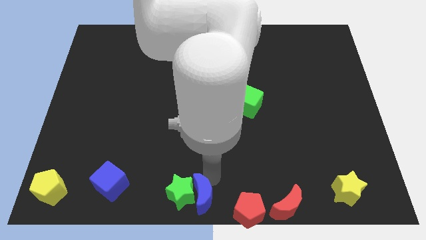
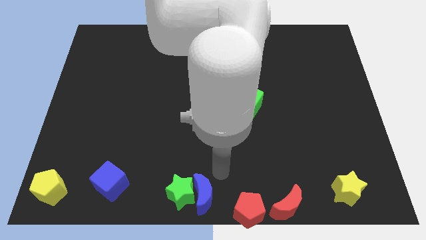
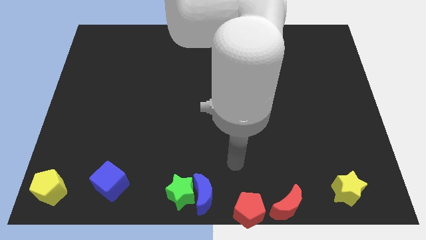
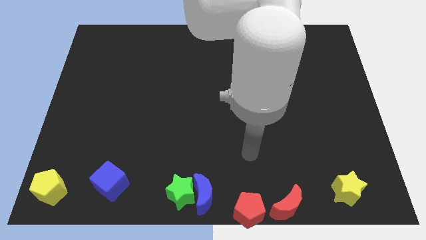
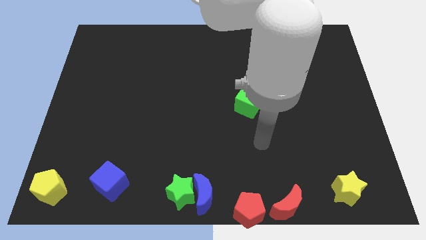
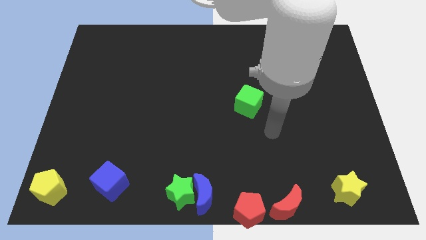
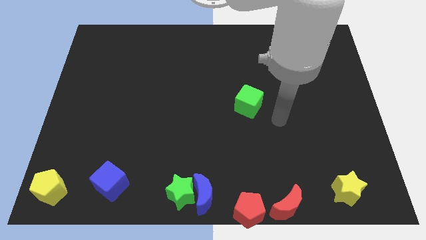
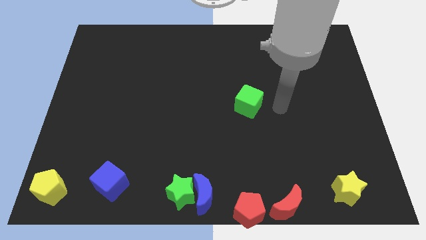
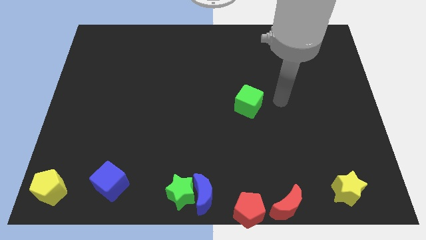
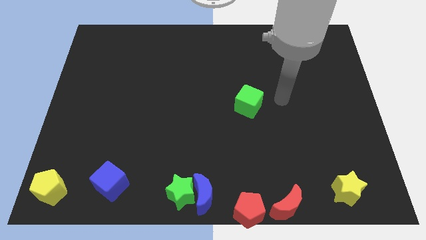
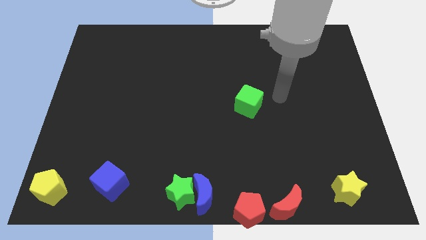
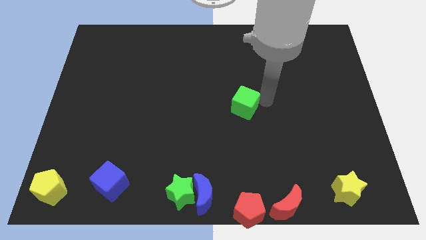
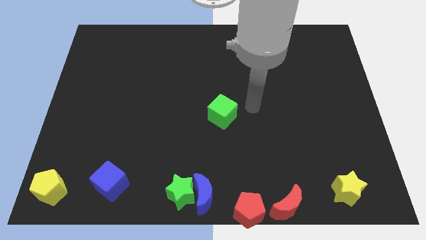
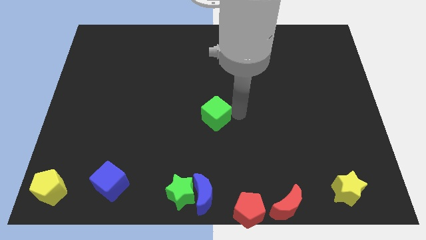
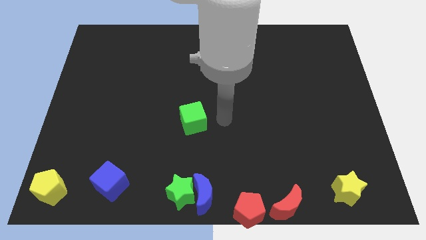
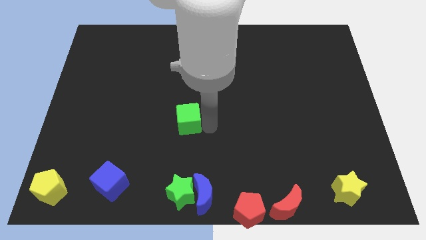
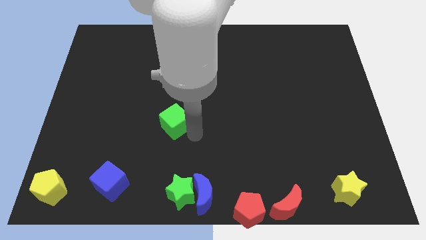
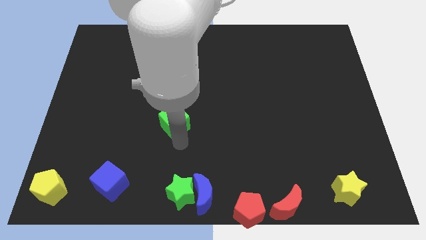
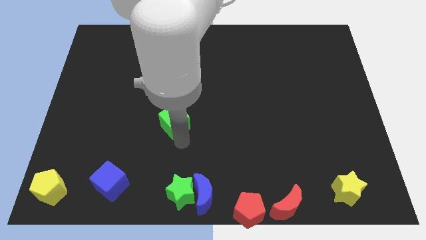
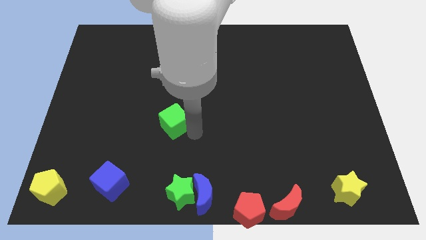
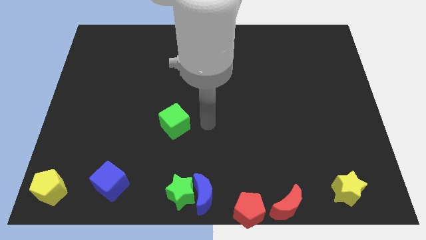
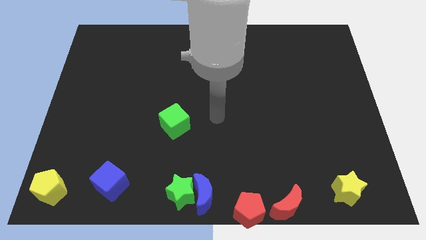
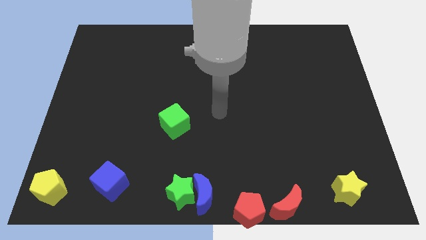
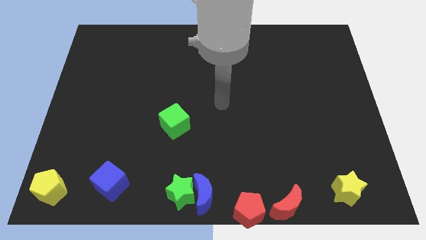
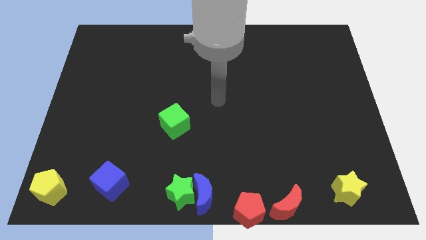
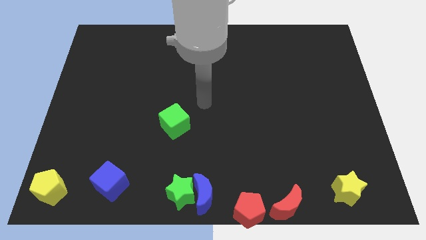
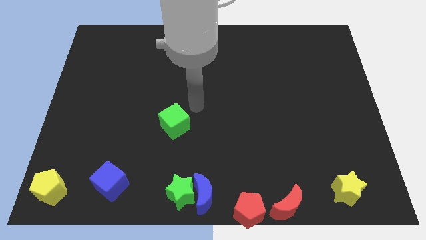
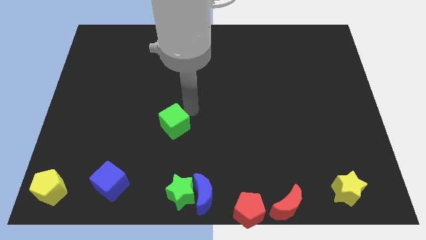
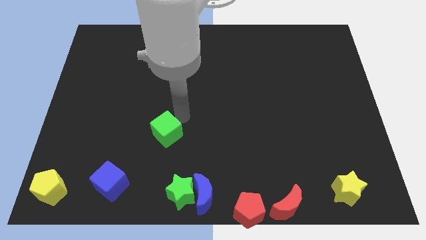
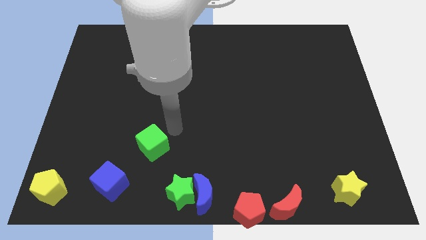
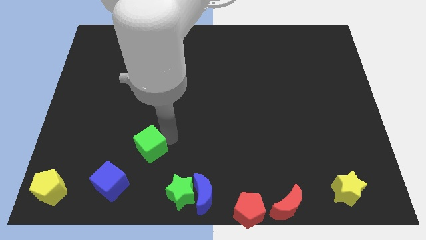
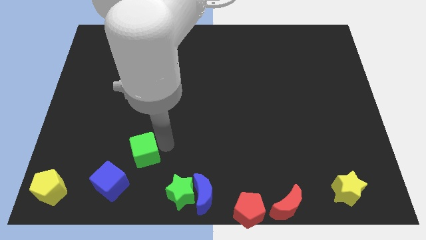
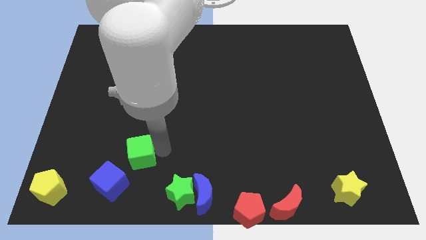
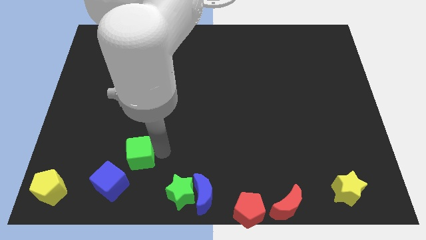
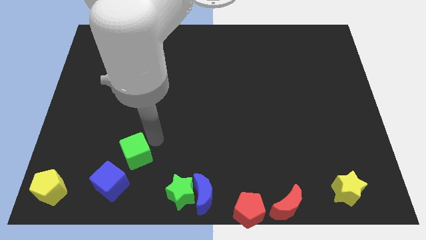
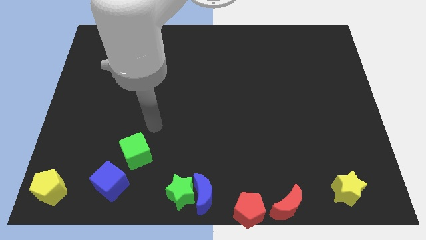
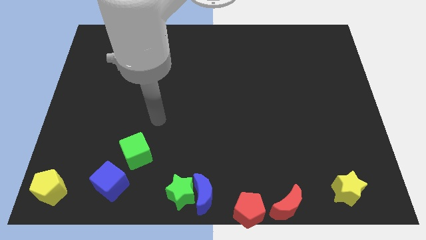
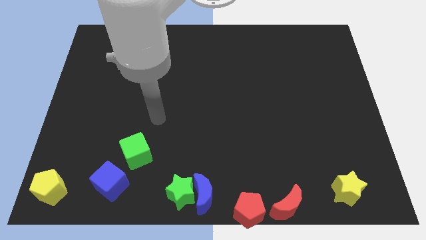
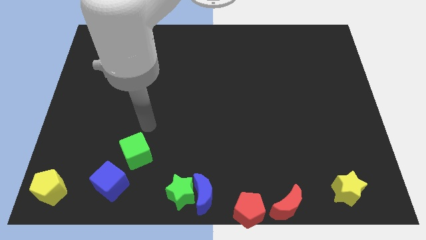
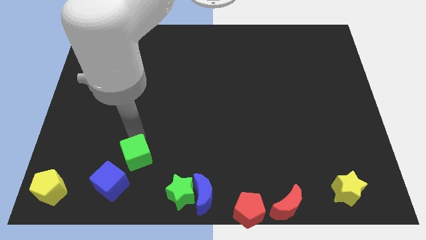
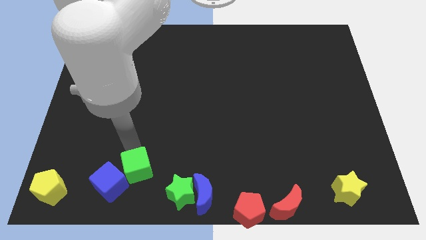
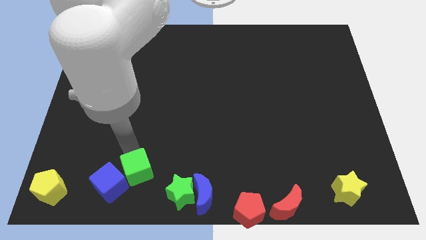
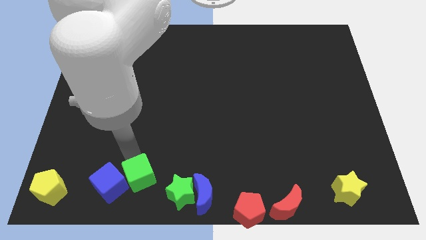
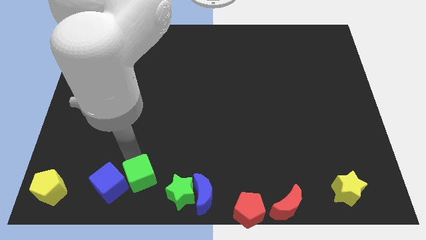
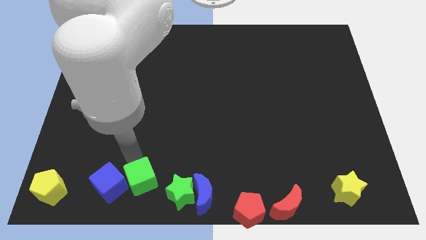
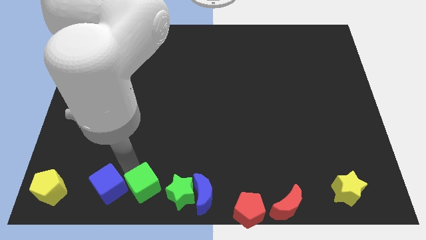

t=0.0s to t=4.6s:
move the green cube into the right side of the blue cube

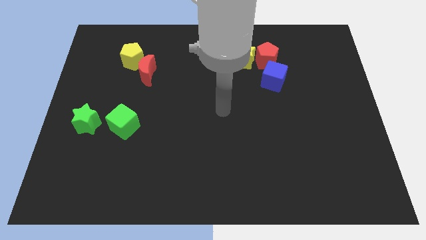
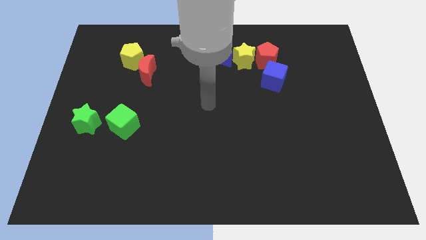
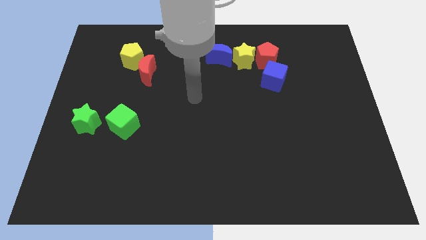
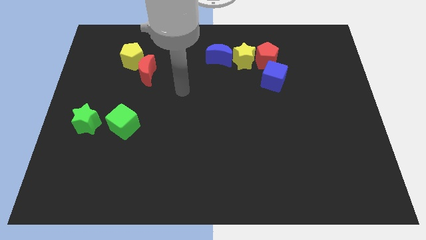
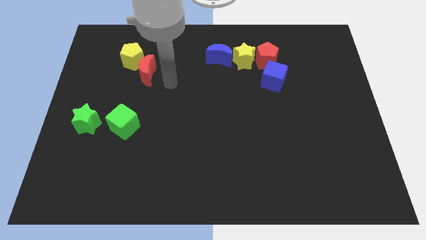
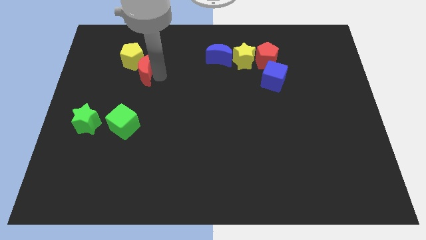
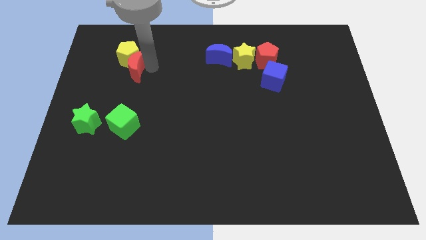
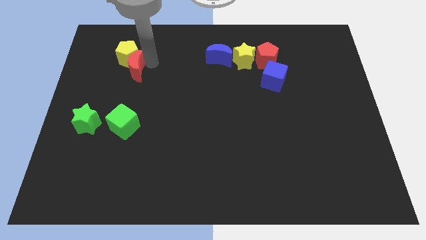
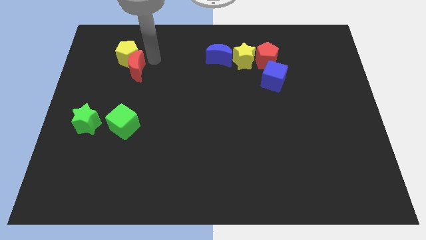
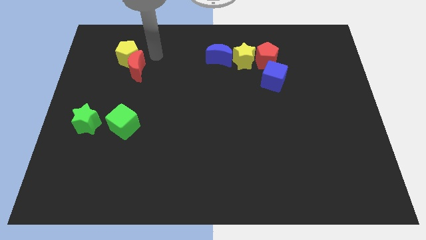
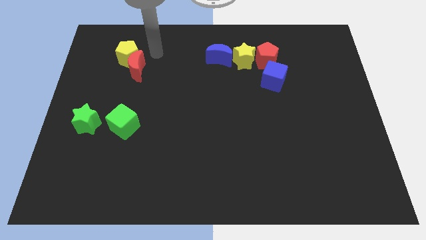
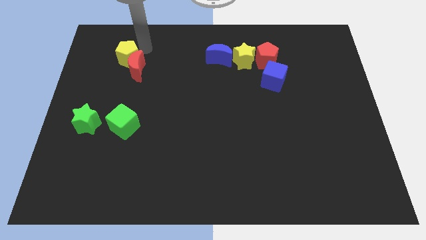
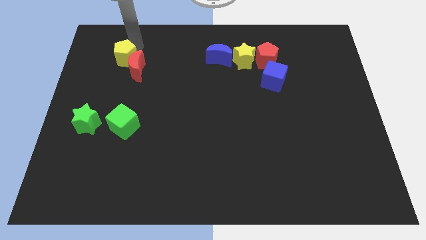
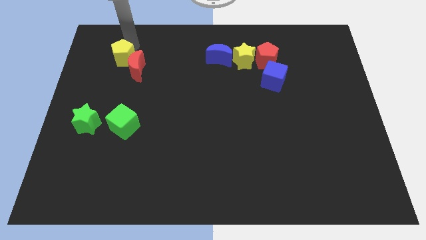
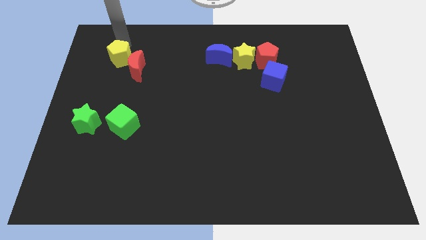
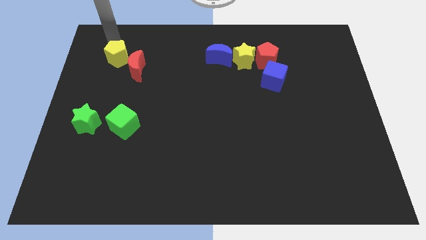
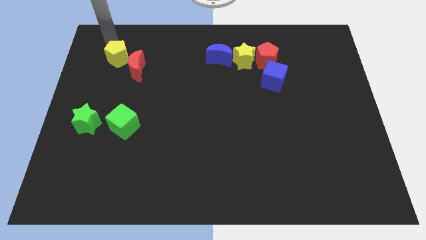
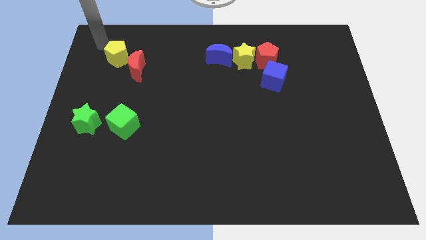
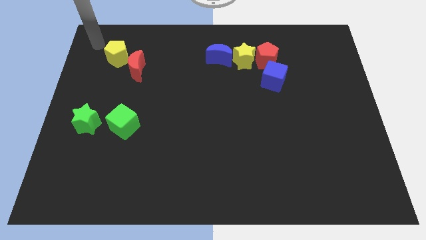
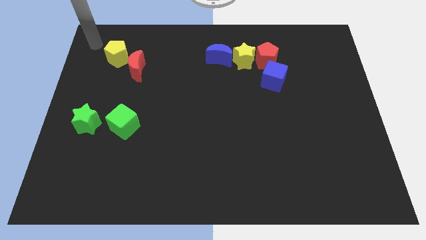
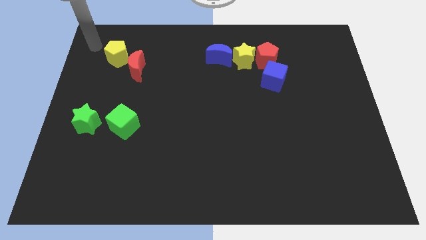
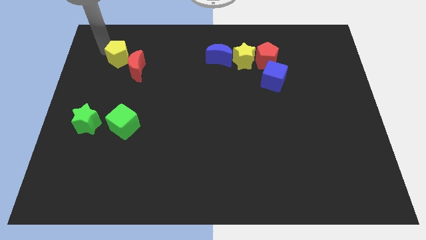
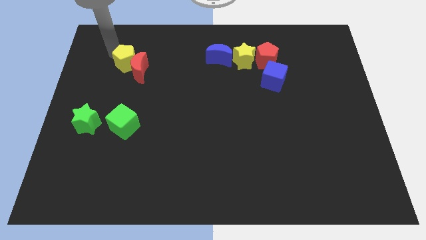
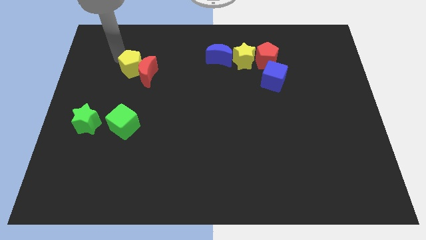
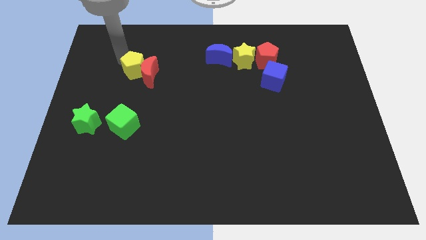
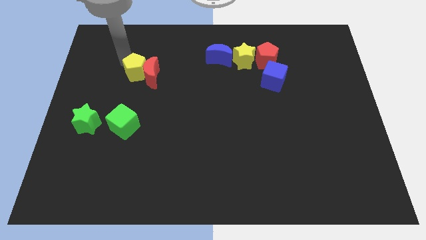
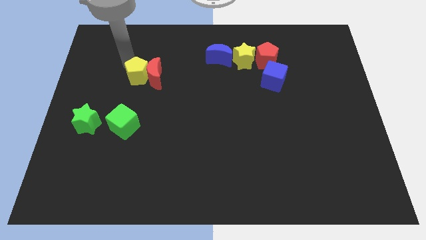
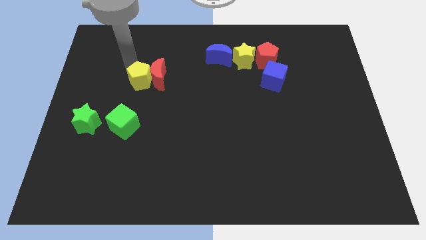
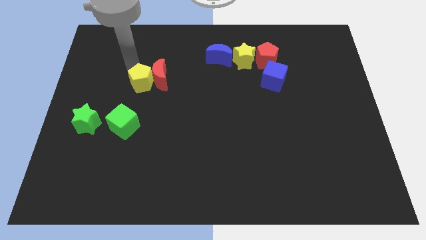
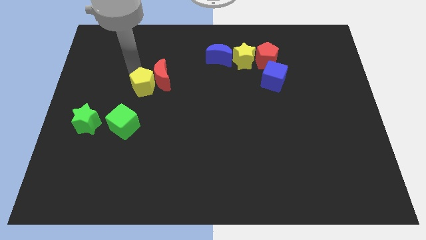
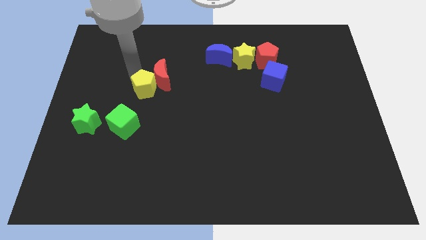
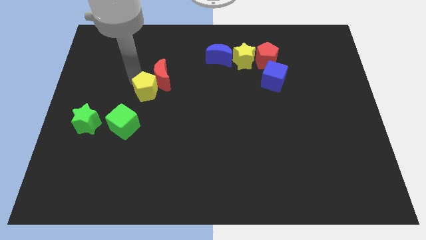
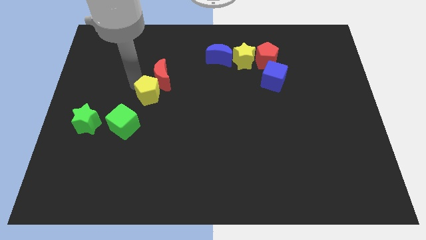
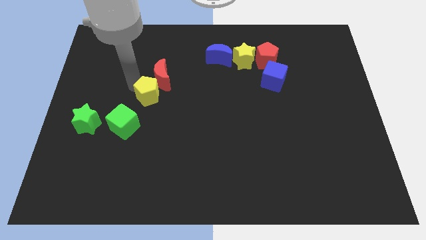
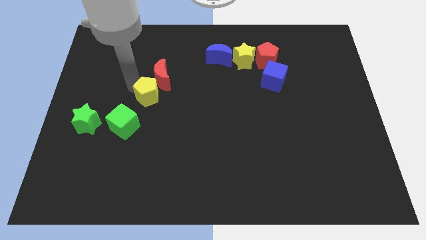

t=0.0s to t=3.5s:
place the yellow pentagon and red moon diagonally on the top right side of the green cube

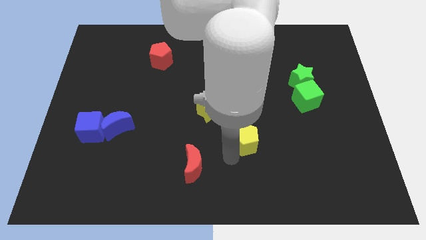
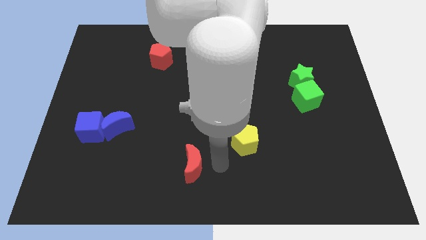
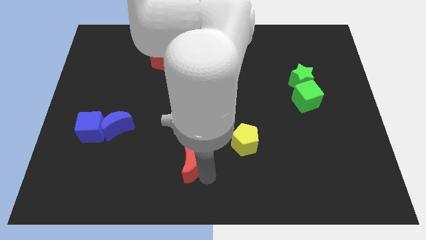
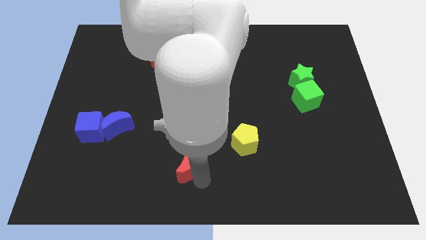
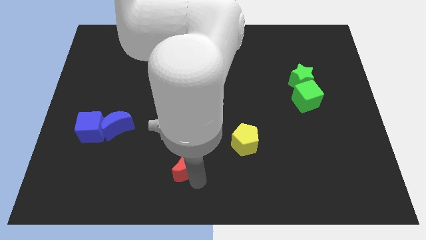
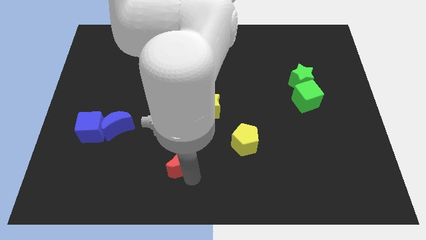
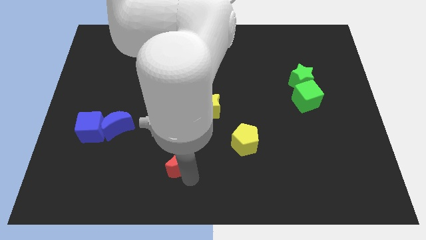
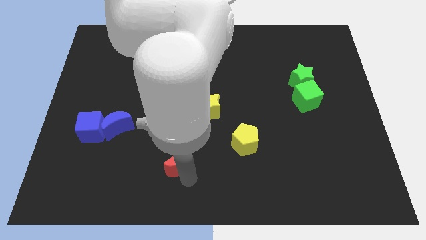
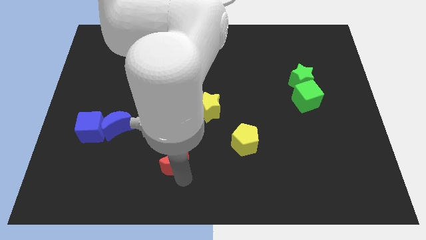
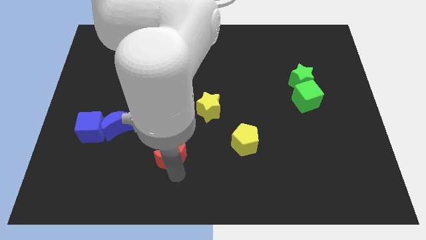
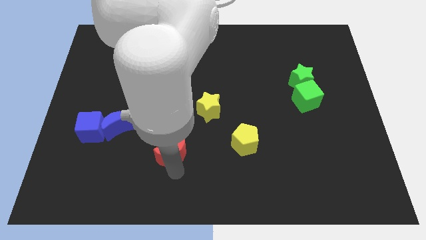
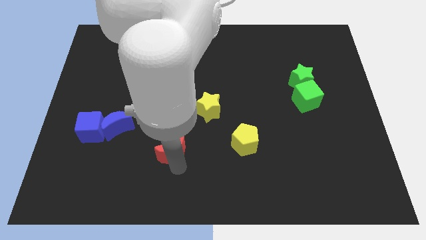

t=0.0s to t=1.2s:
put the red moon horizontally left to the yellow pentagon
